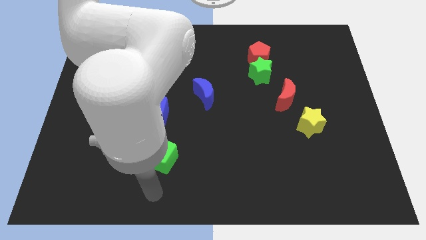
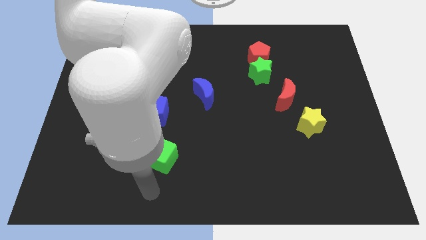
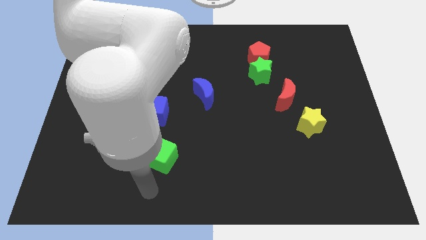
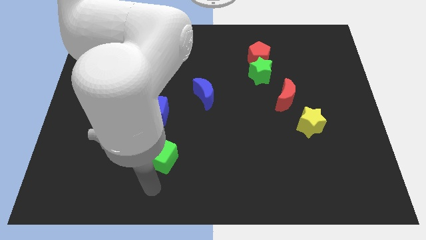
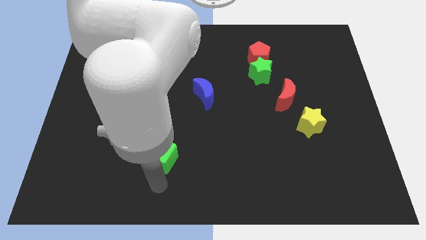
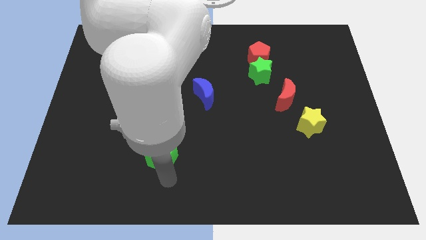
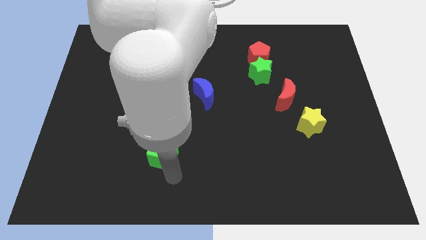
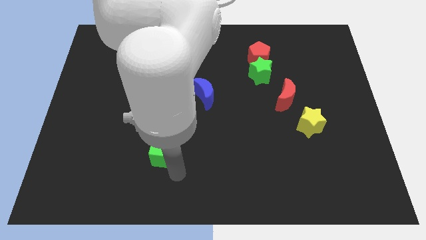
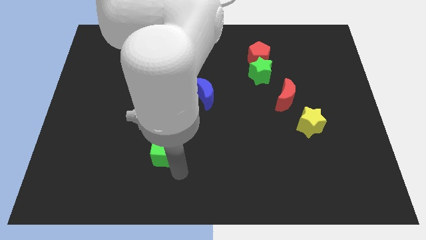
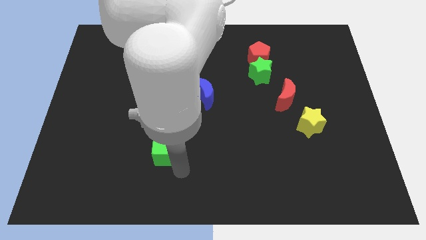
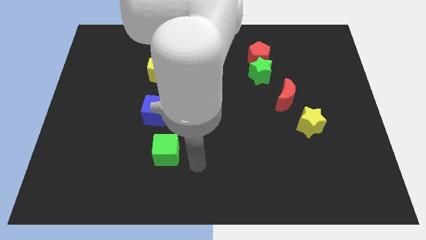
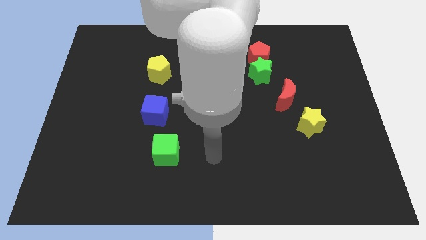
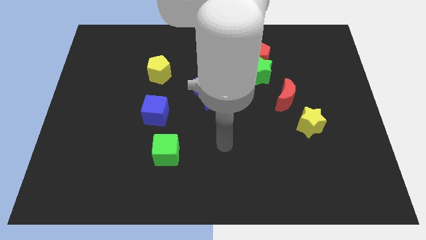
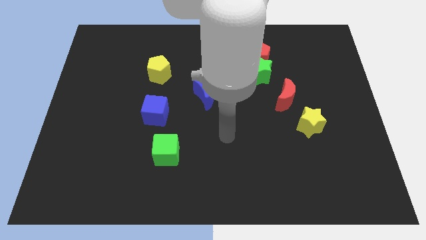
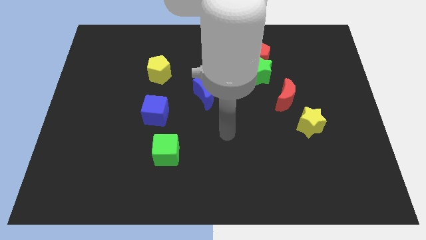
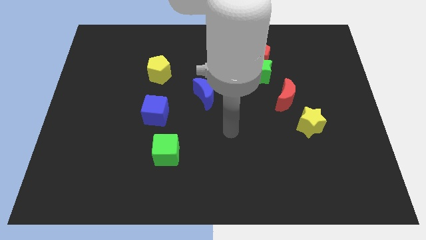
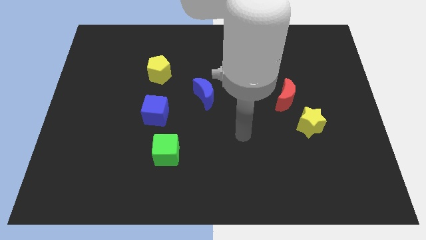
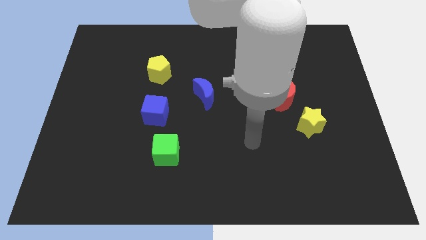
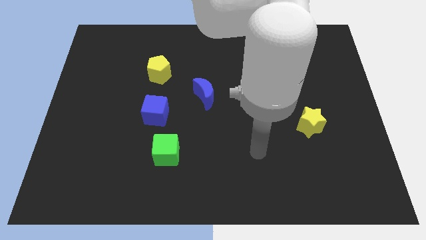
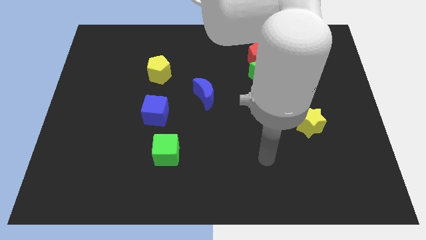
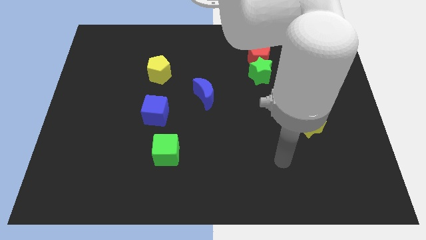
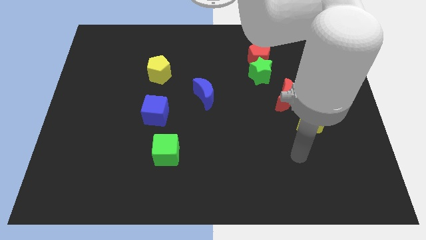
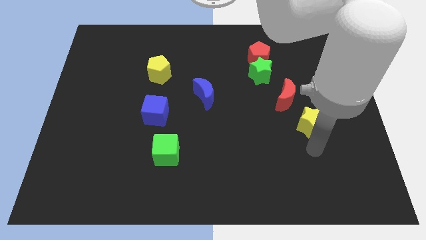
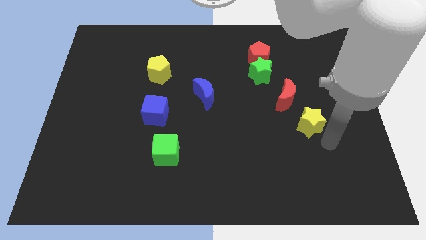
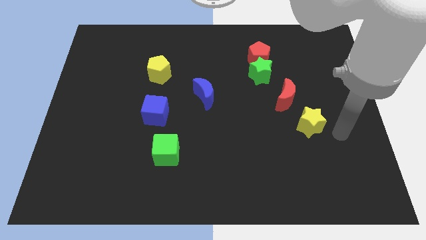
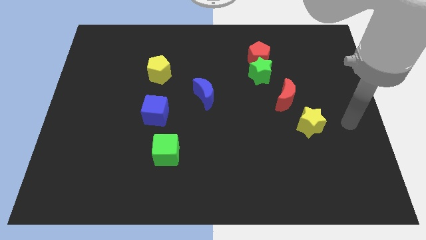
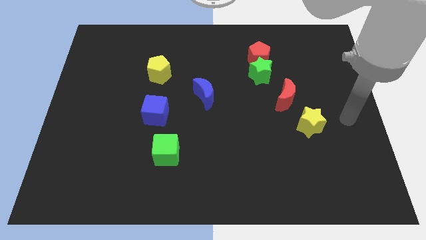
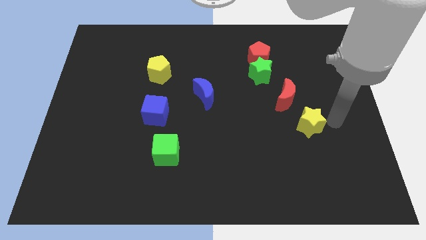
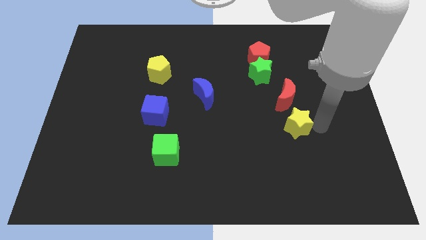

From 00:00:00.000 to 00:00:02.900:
move your arm to the right of the yellow star

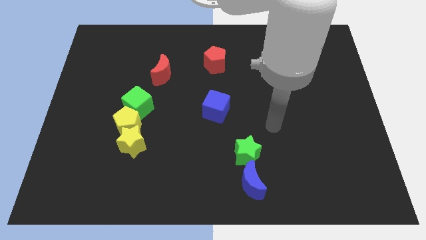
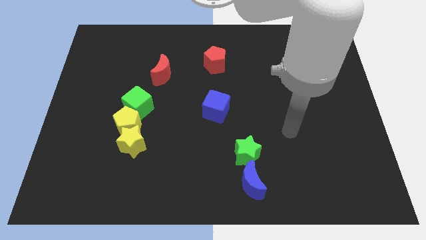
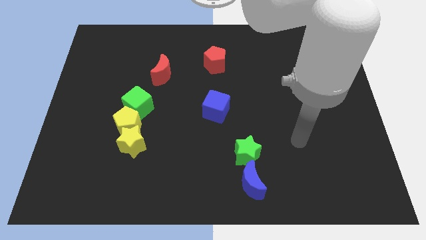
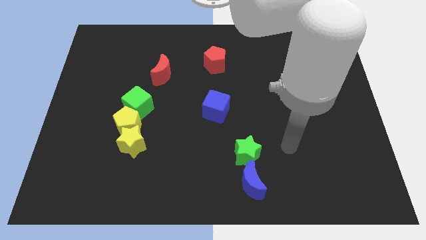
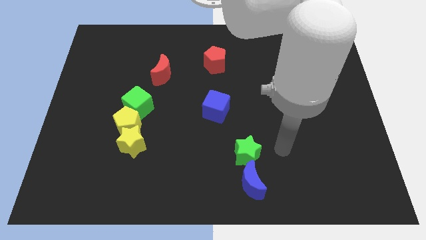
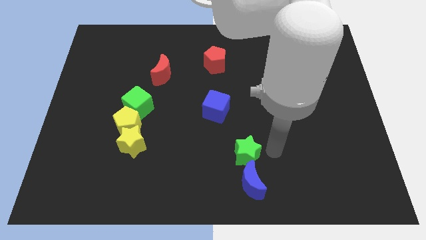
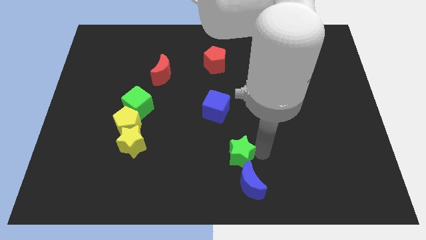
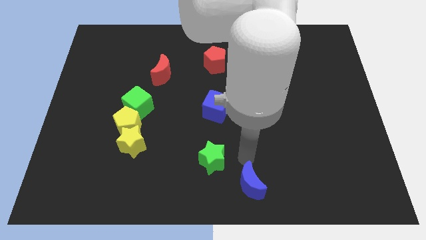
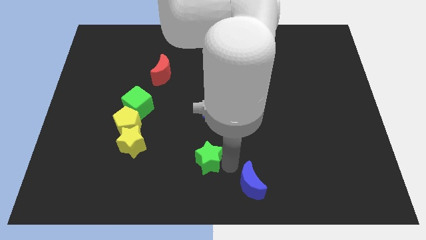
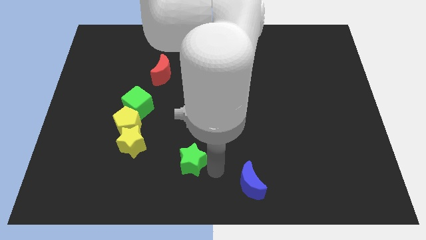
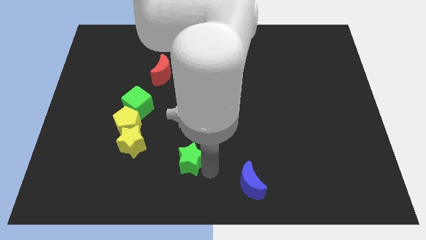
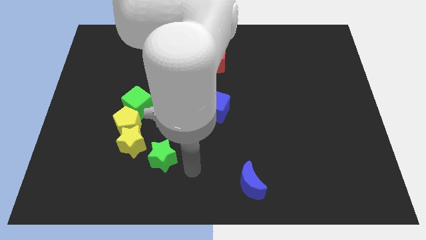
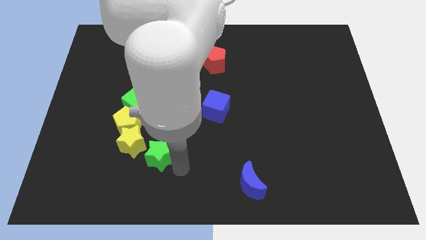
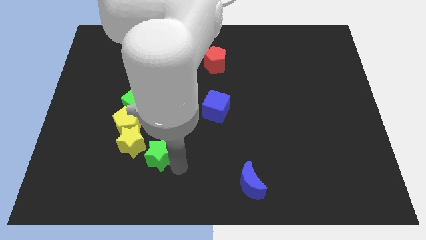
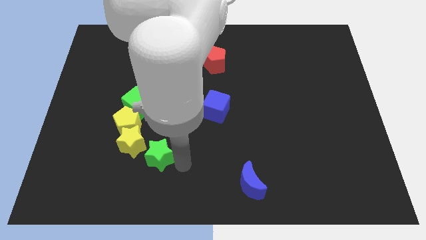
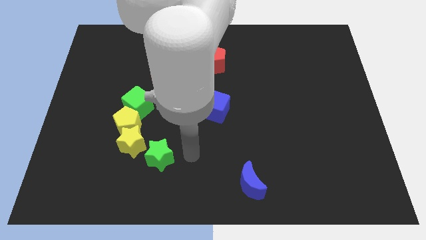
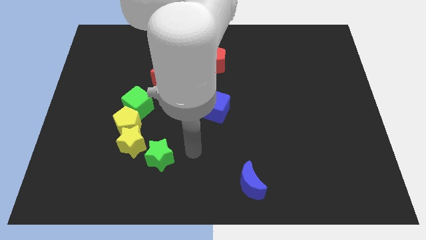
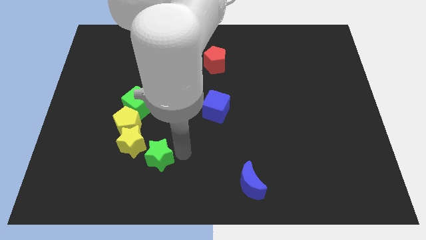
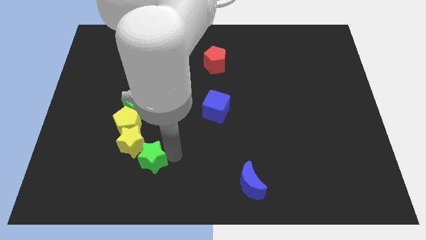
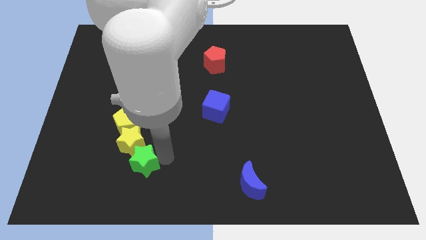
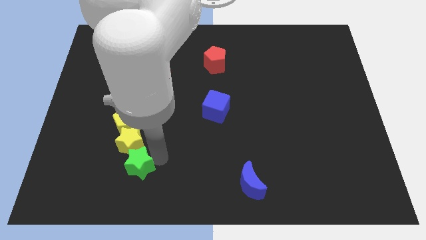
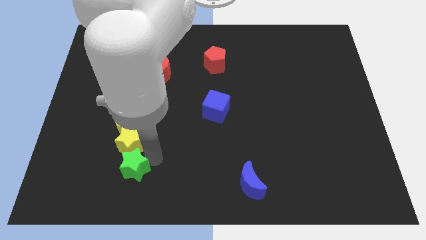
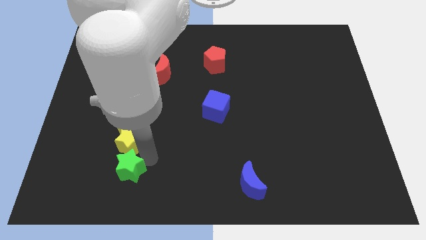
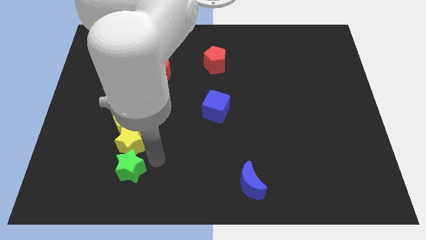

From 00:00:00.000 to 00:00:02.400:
place the green star below the yellow star

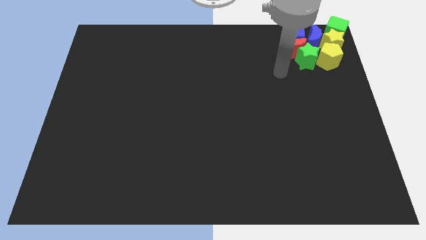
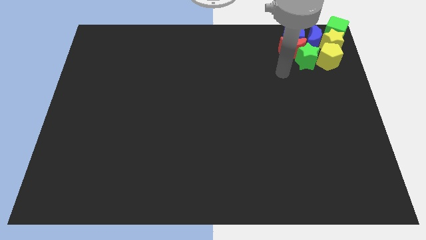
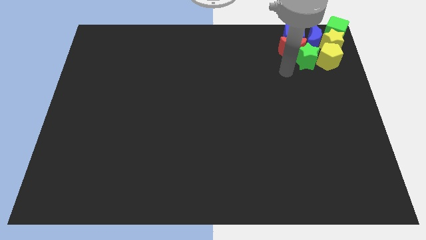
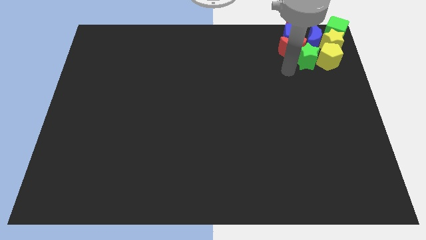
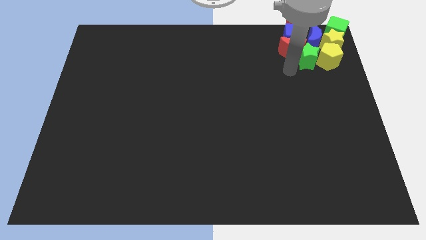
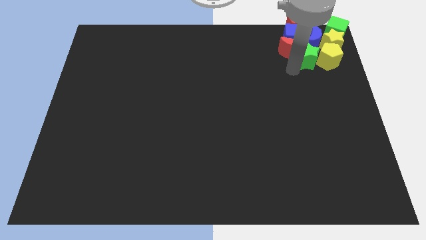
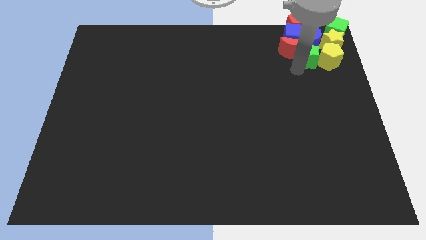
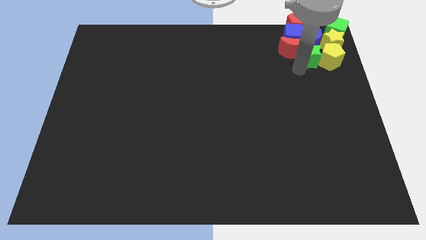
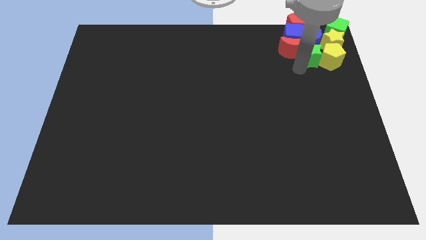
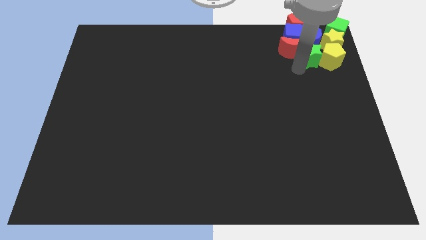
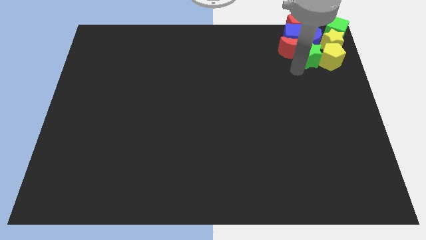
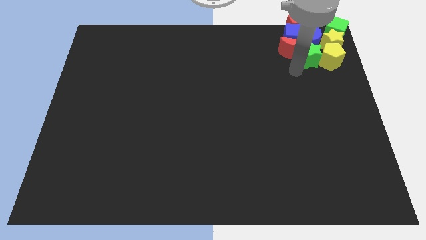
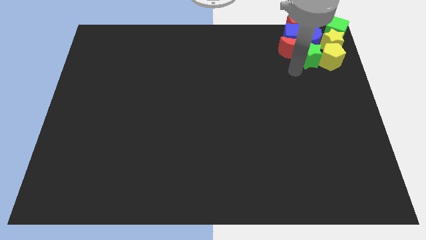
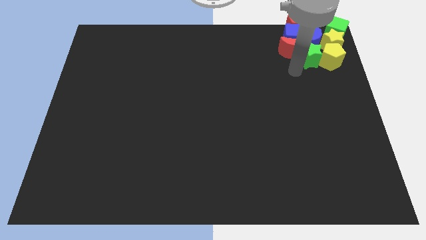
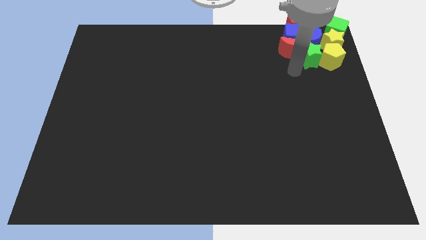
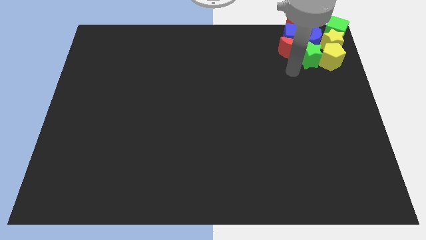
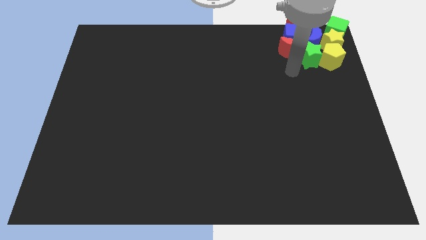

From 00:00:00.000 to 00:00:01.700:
slightly push the green star into the yellow pentagon

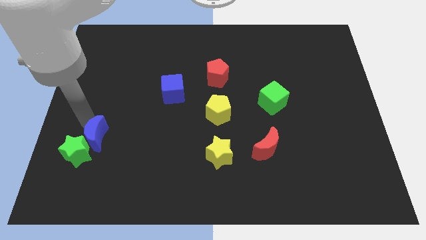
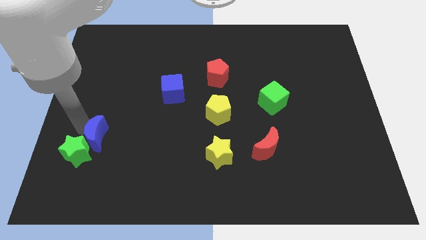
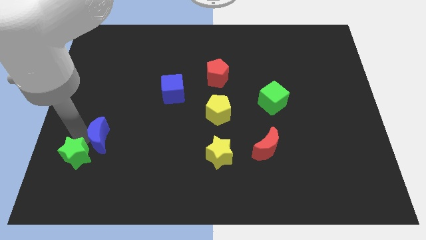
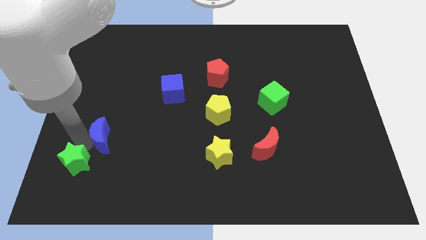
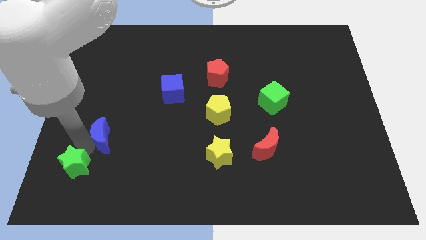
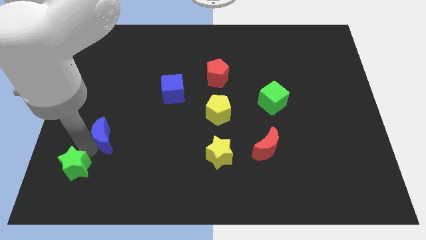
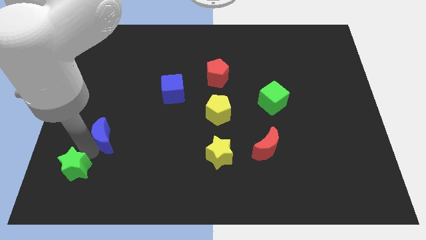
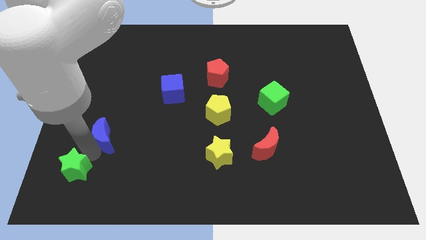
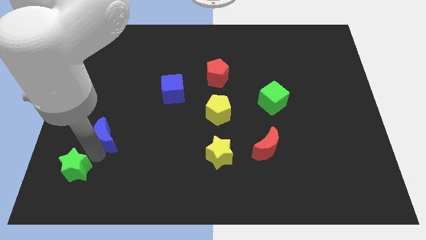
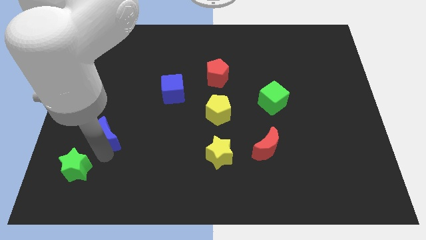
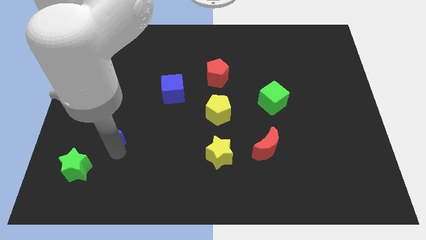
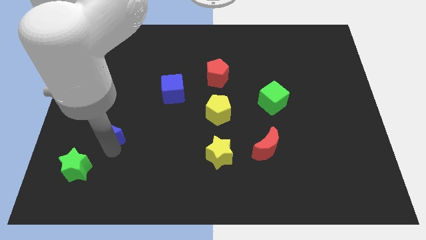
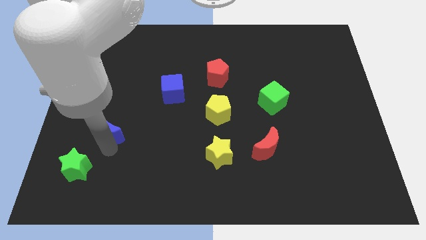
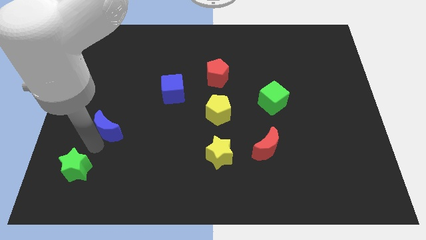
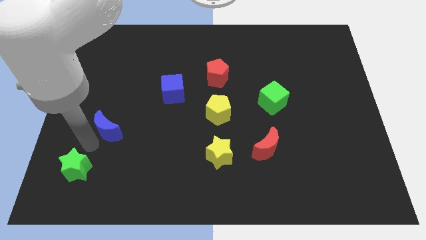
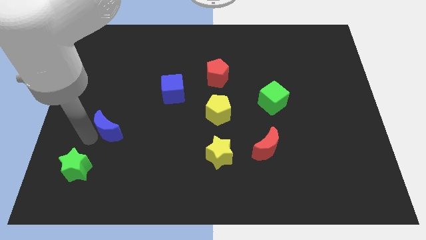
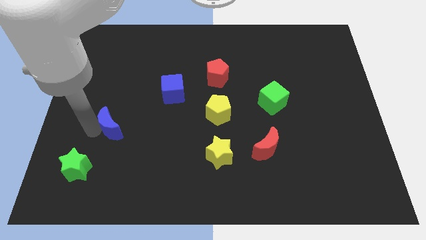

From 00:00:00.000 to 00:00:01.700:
separate the blue crescent and the green star from each other

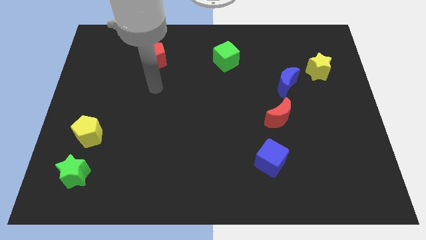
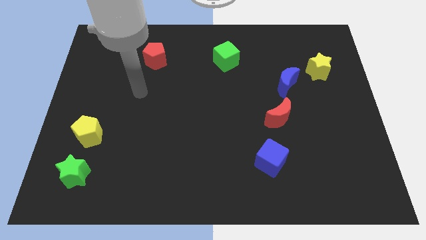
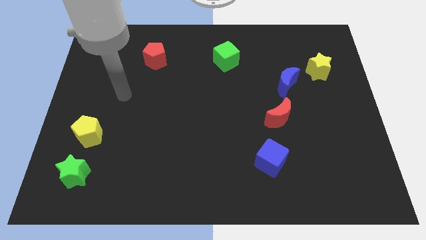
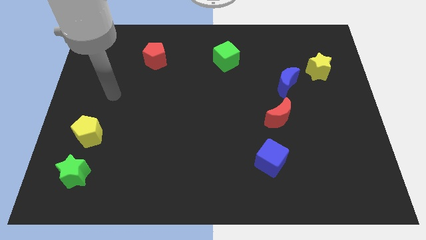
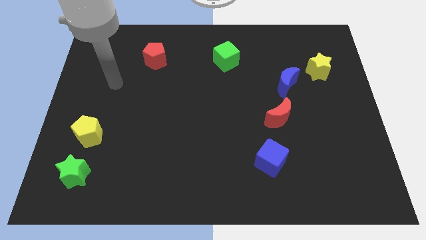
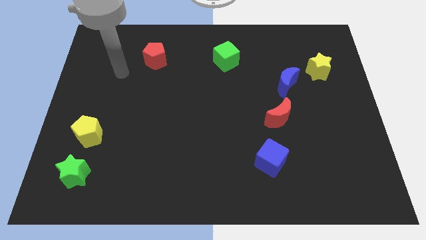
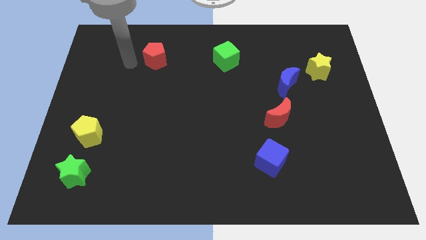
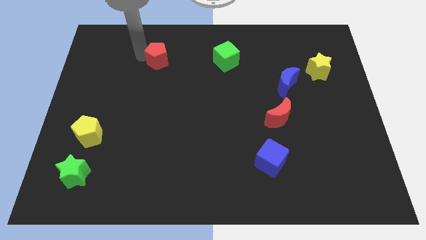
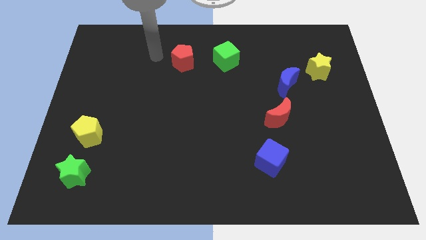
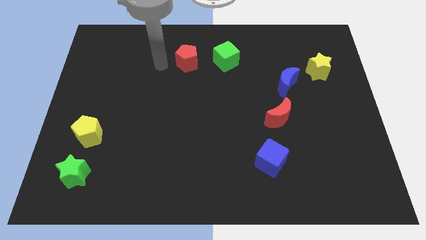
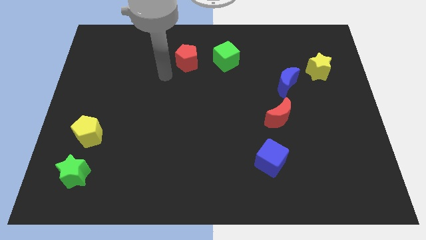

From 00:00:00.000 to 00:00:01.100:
push the red pentagon towards the left of the green cube
